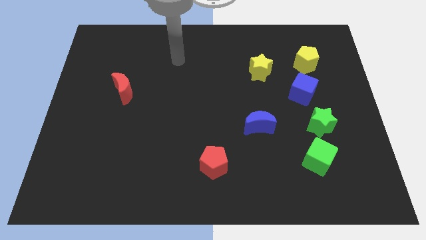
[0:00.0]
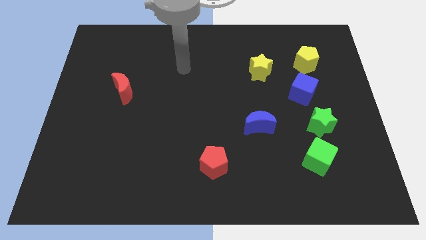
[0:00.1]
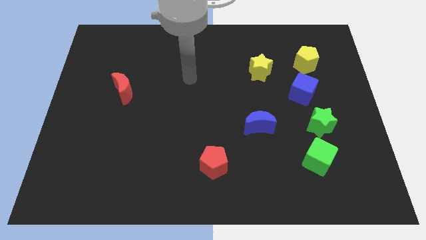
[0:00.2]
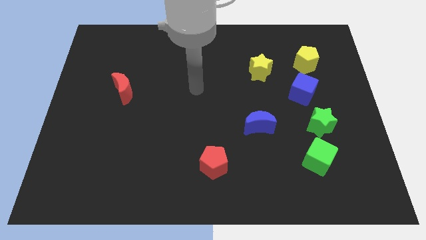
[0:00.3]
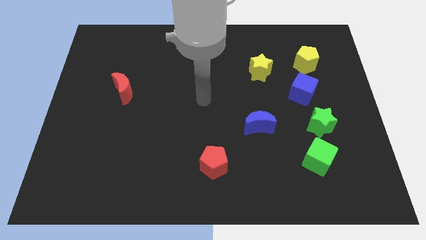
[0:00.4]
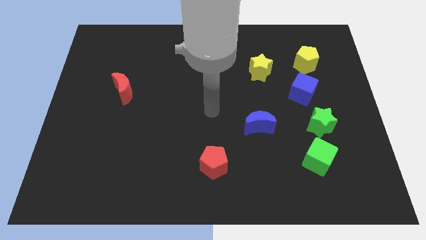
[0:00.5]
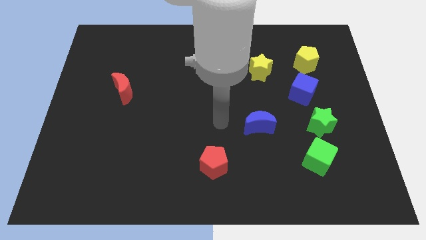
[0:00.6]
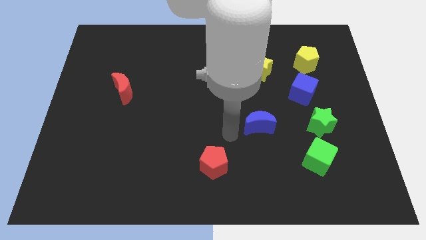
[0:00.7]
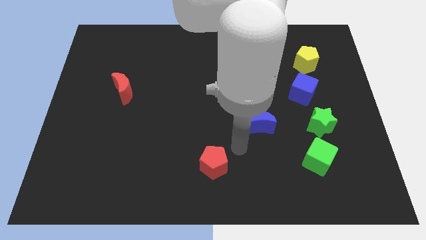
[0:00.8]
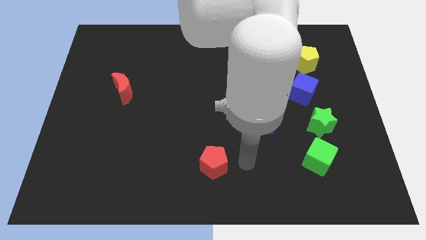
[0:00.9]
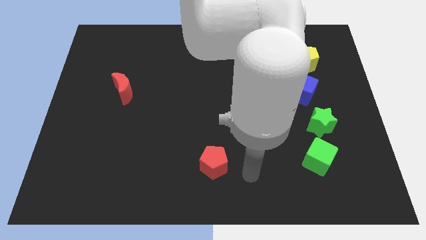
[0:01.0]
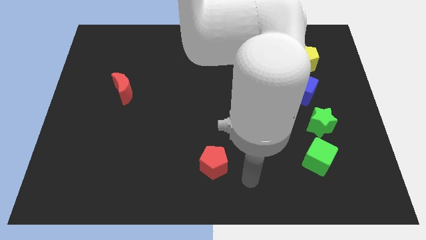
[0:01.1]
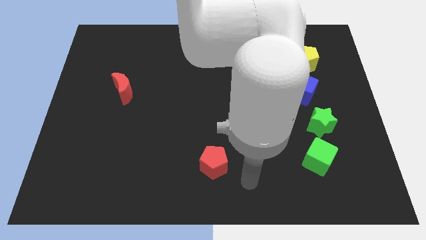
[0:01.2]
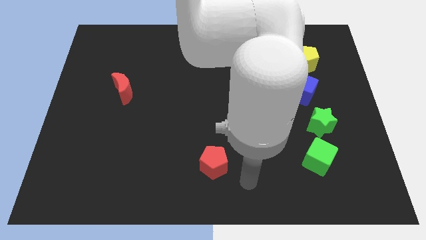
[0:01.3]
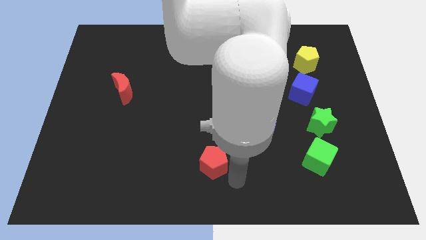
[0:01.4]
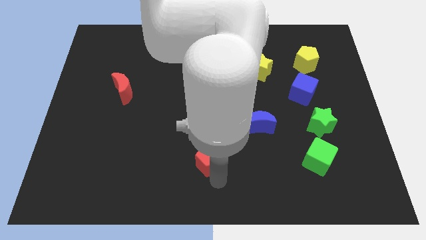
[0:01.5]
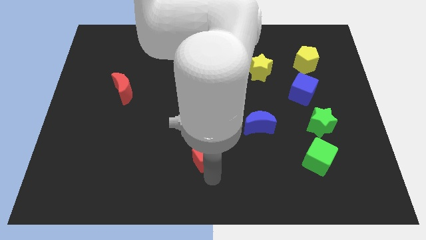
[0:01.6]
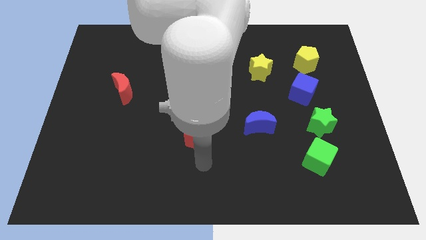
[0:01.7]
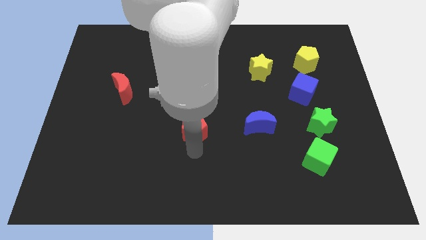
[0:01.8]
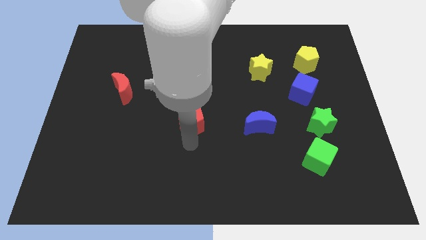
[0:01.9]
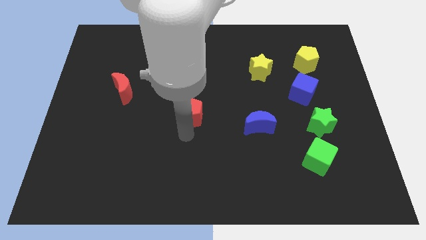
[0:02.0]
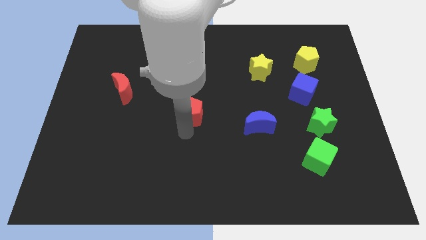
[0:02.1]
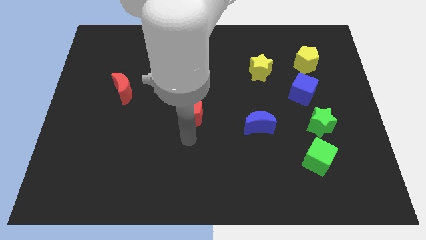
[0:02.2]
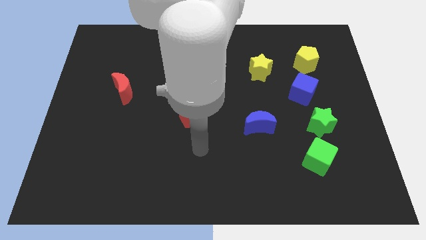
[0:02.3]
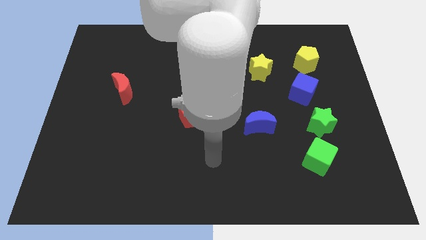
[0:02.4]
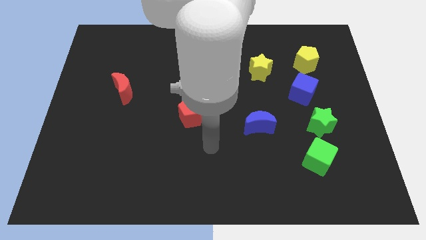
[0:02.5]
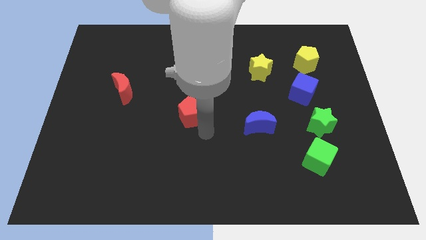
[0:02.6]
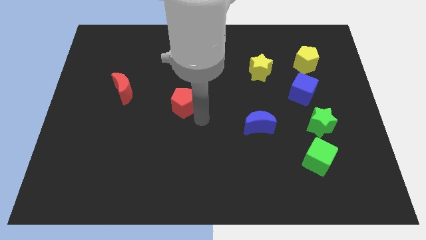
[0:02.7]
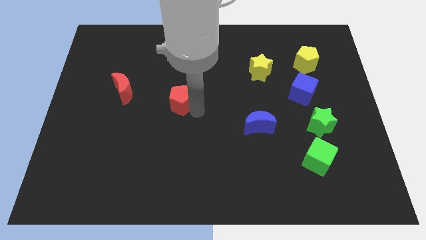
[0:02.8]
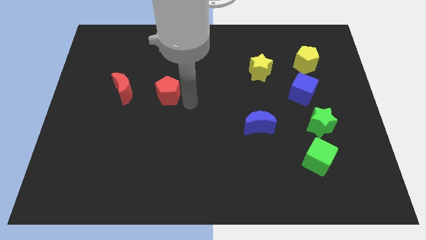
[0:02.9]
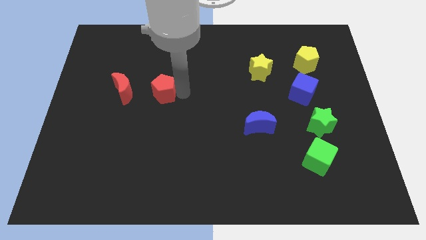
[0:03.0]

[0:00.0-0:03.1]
slide red pentagon to the right of red moon

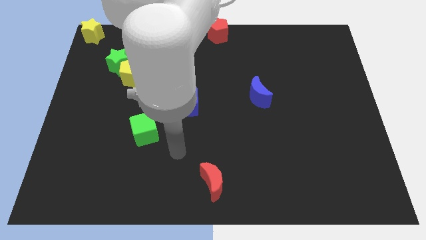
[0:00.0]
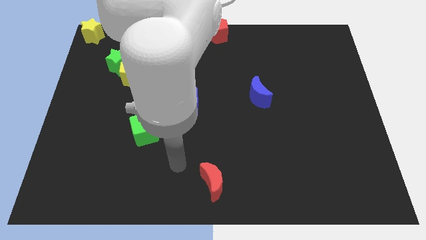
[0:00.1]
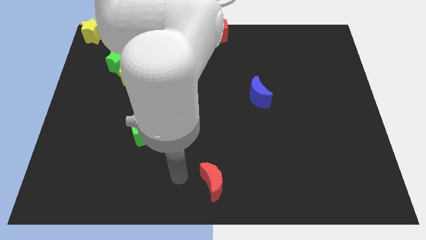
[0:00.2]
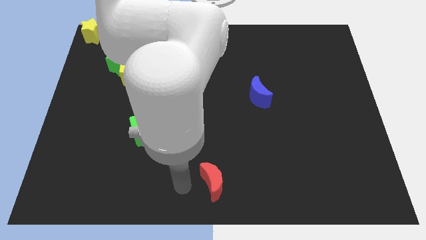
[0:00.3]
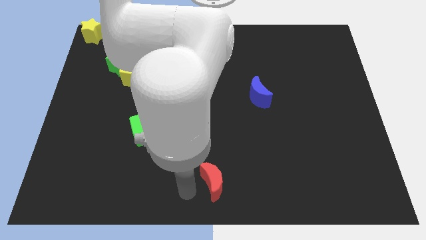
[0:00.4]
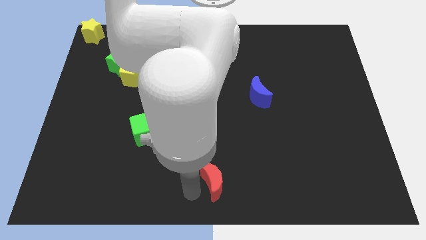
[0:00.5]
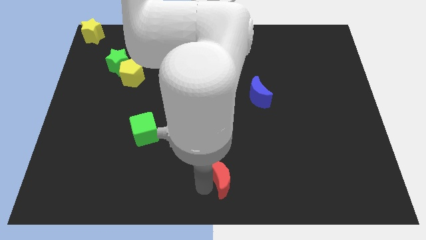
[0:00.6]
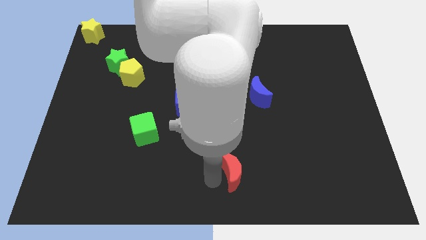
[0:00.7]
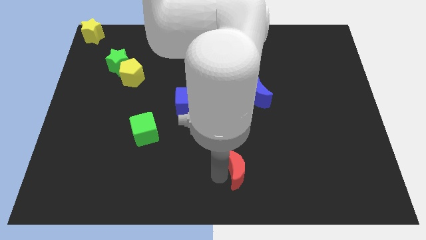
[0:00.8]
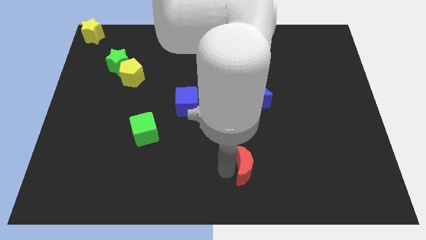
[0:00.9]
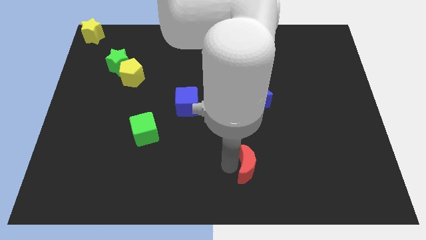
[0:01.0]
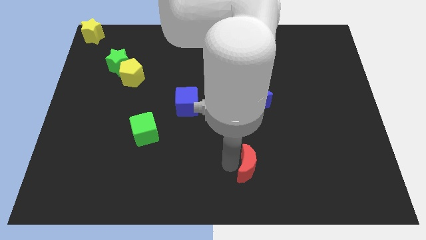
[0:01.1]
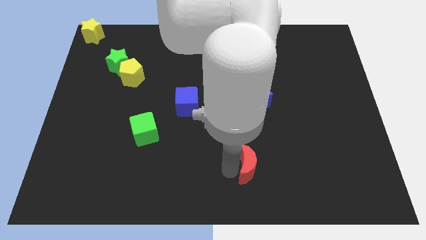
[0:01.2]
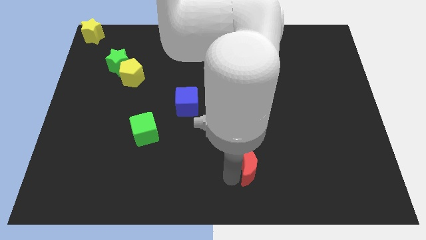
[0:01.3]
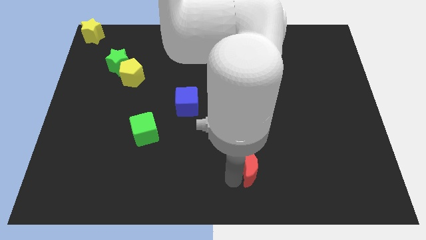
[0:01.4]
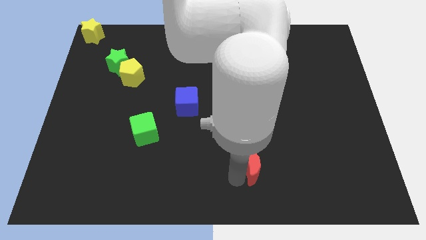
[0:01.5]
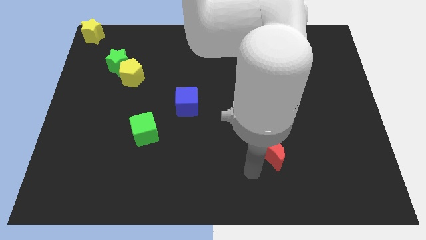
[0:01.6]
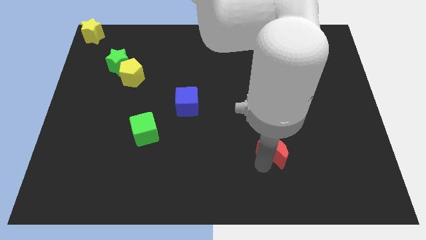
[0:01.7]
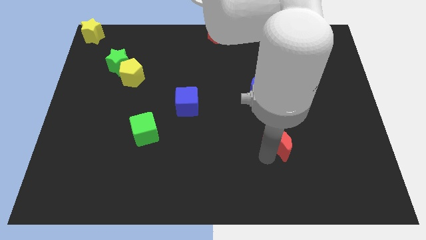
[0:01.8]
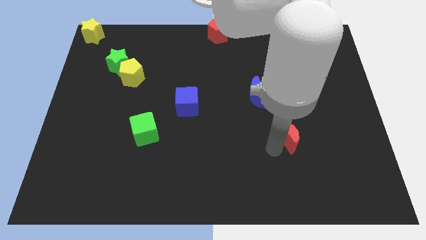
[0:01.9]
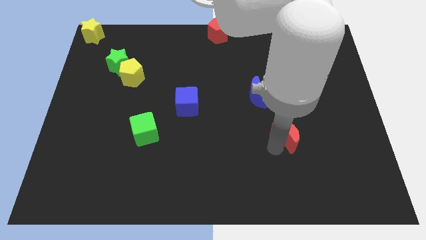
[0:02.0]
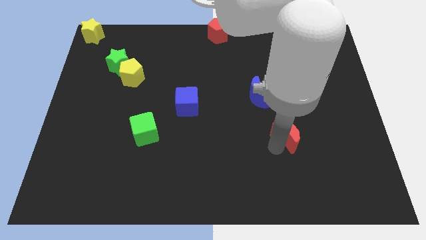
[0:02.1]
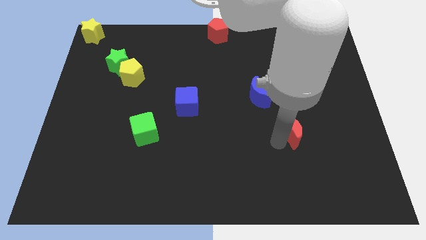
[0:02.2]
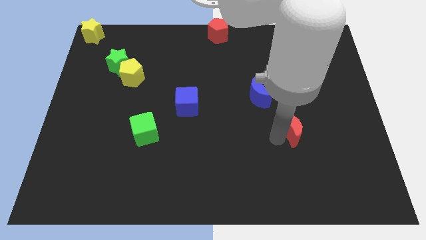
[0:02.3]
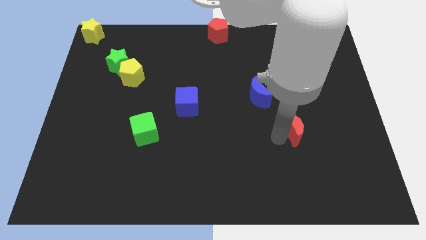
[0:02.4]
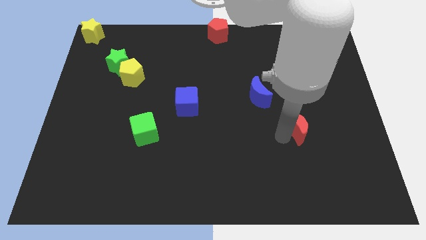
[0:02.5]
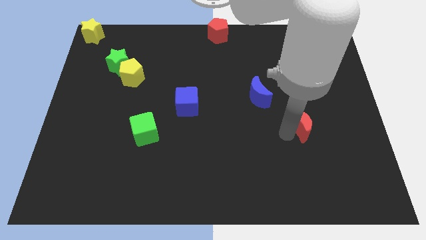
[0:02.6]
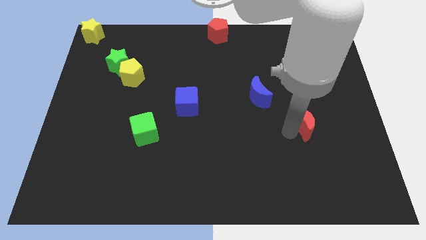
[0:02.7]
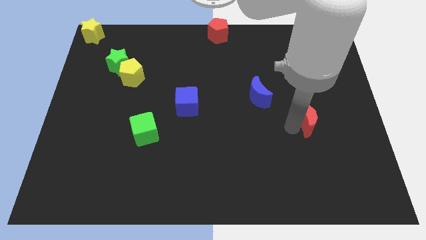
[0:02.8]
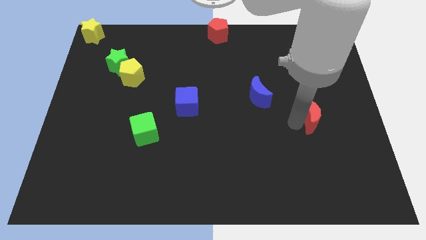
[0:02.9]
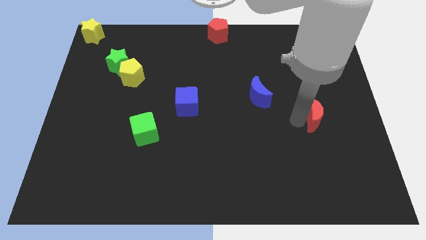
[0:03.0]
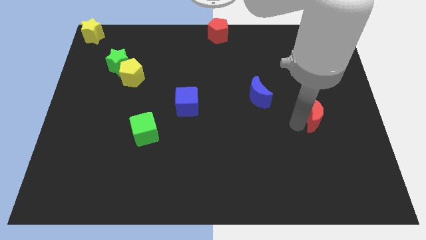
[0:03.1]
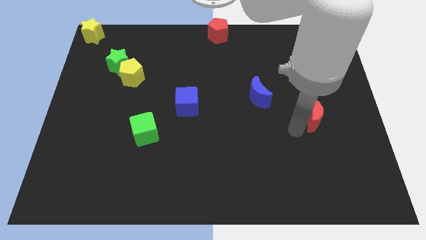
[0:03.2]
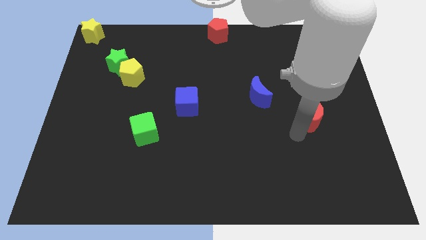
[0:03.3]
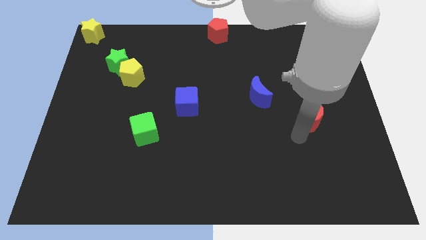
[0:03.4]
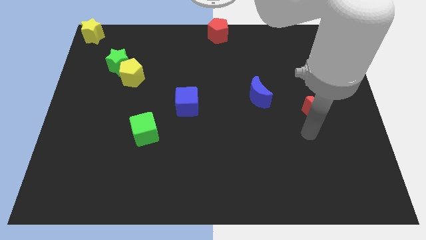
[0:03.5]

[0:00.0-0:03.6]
place red moon to the bottom right of the blue moon

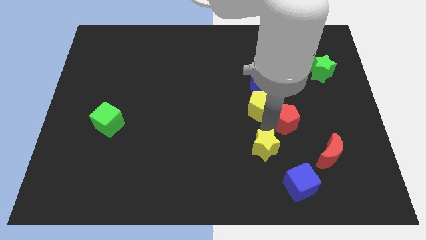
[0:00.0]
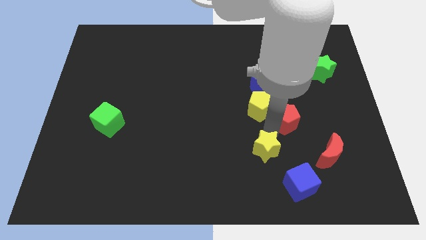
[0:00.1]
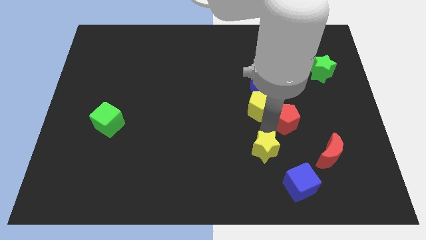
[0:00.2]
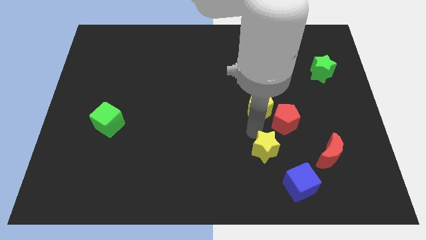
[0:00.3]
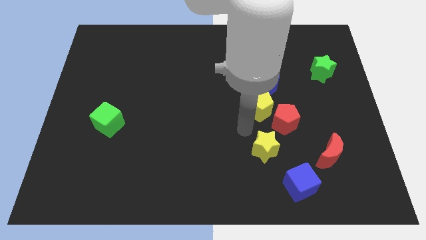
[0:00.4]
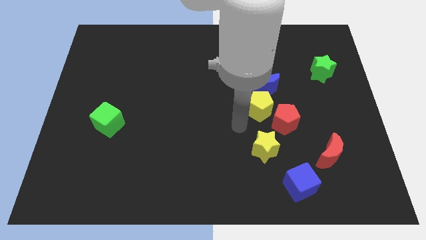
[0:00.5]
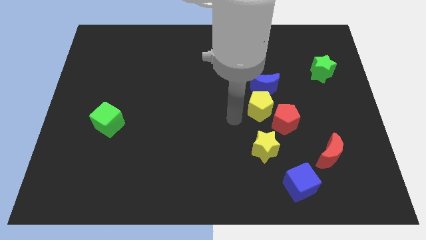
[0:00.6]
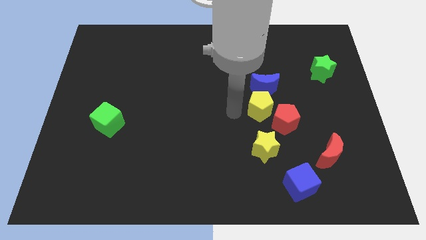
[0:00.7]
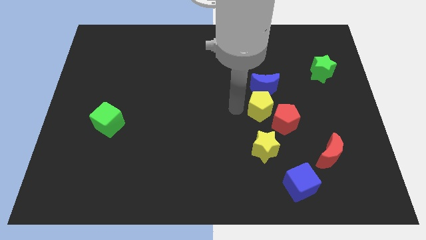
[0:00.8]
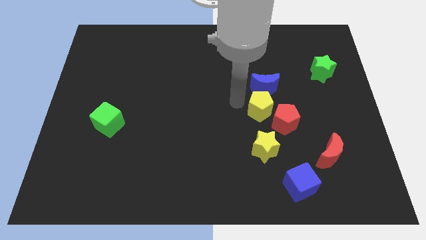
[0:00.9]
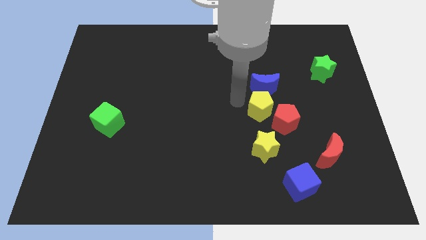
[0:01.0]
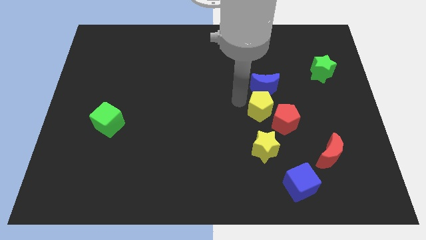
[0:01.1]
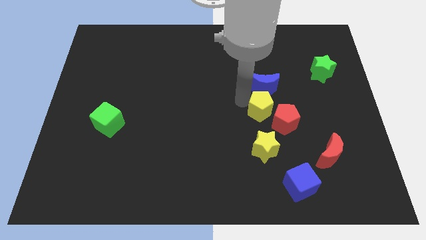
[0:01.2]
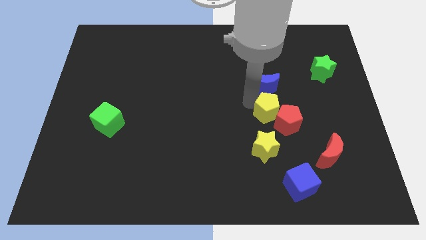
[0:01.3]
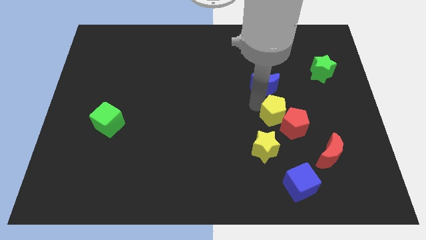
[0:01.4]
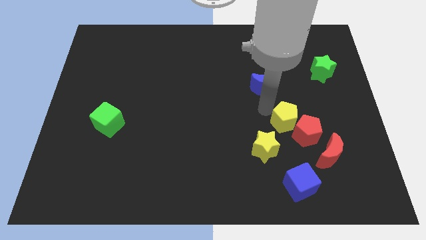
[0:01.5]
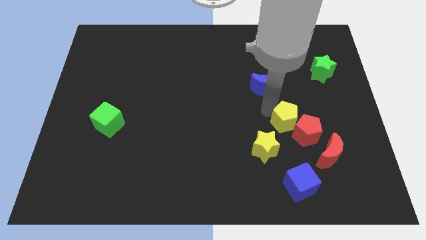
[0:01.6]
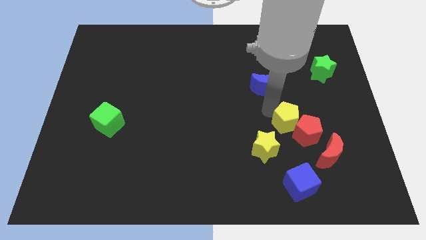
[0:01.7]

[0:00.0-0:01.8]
push the red pentagon along with the yellow pentagon towards the bottom right

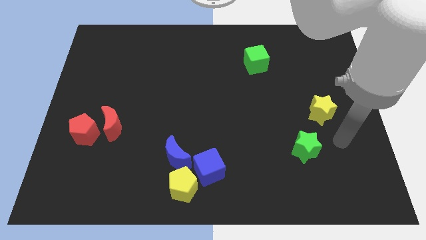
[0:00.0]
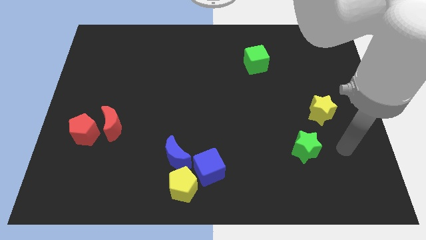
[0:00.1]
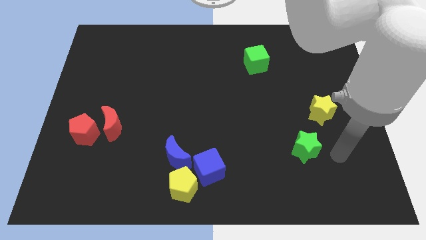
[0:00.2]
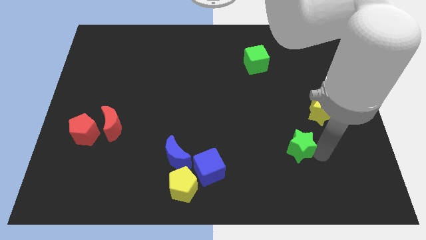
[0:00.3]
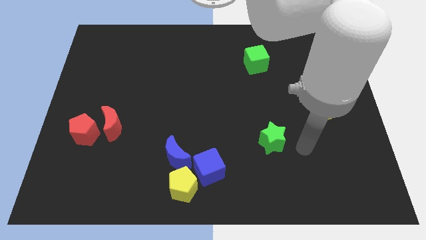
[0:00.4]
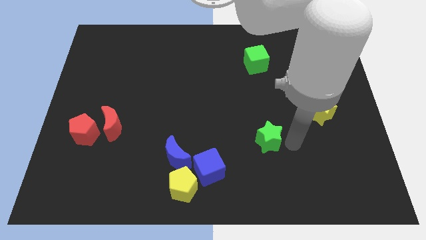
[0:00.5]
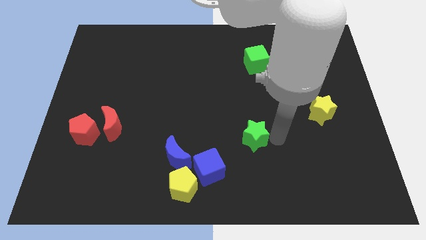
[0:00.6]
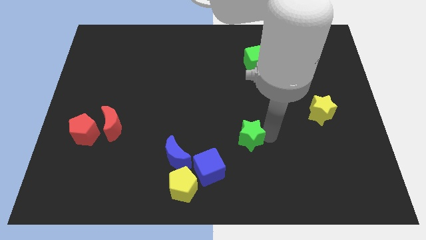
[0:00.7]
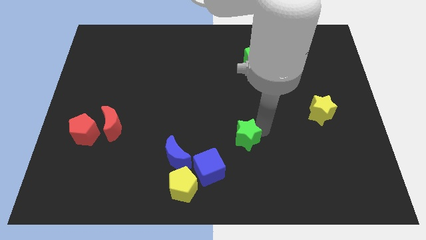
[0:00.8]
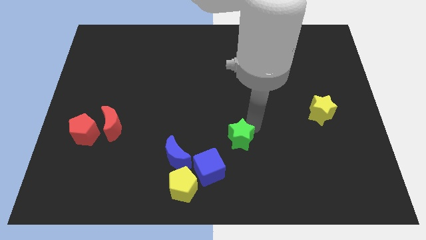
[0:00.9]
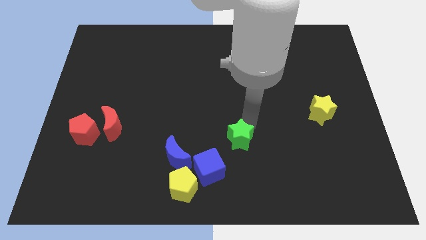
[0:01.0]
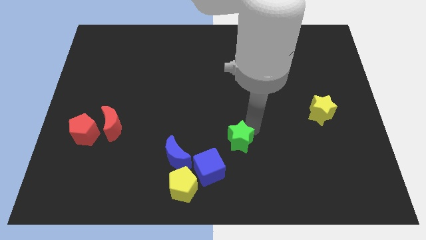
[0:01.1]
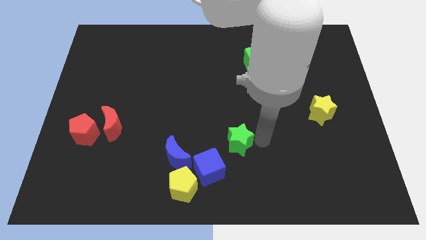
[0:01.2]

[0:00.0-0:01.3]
push the green star at the top right of the blue cube
